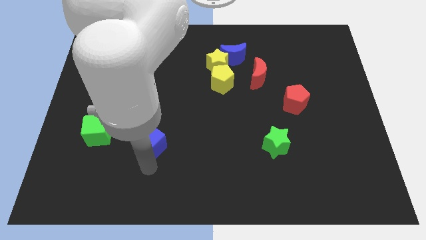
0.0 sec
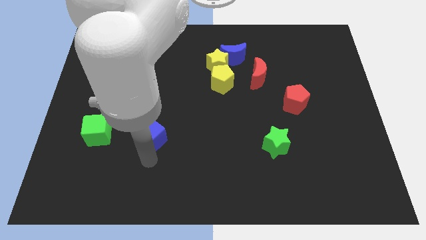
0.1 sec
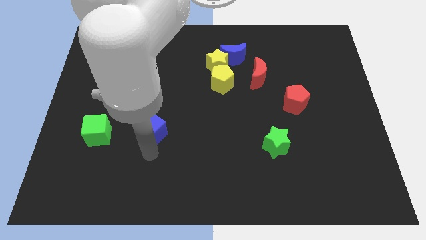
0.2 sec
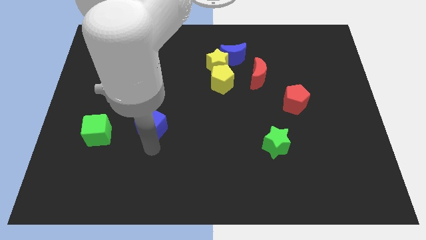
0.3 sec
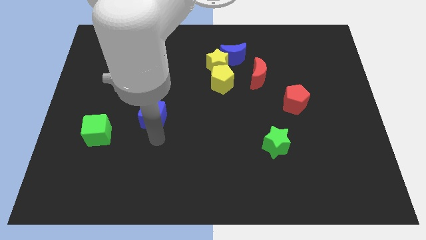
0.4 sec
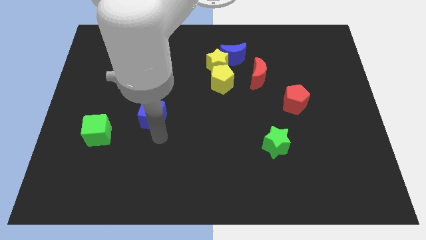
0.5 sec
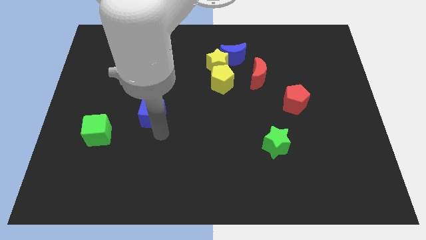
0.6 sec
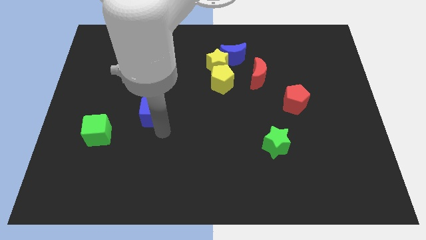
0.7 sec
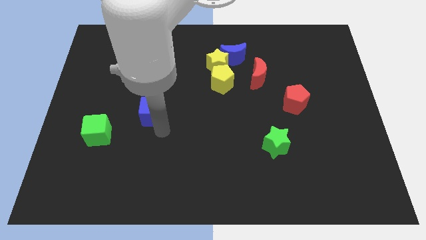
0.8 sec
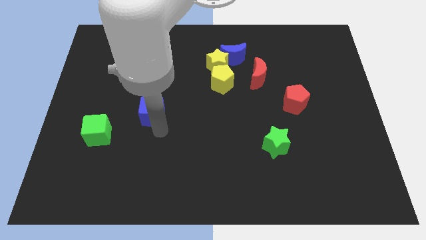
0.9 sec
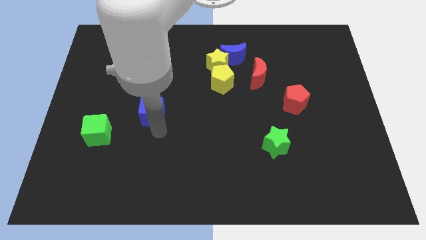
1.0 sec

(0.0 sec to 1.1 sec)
place the blue cube between the green cube and yellow pentagon

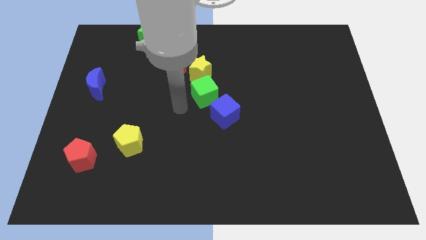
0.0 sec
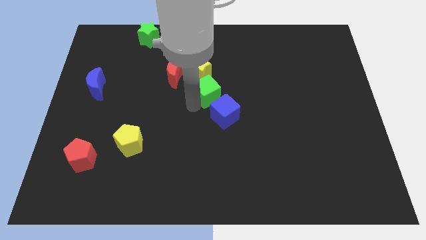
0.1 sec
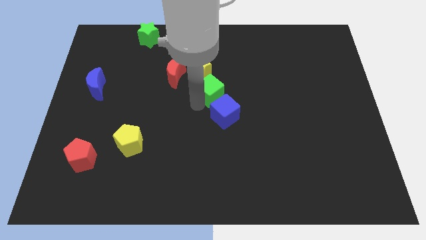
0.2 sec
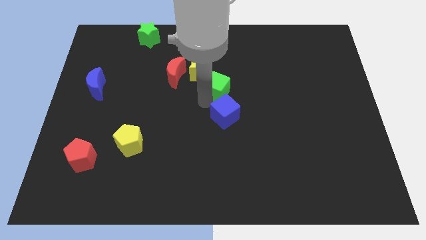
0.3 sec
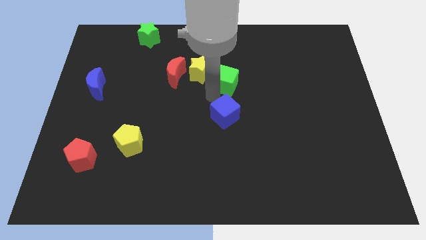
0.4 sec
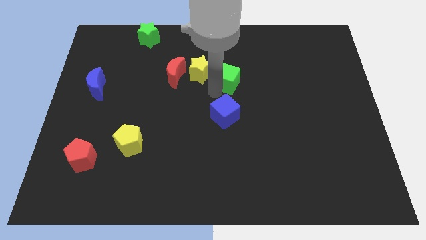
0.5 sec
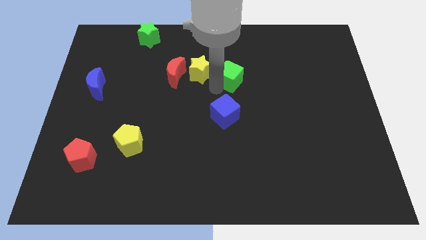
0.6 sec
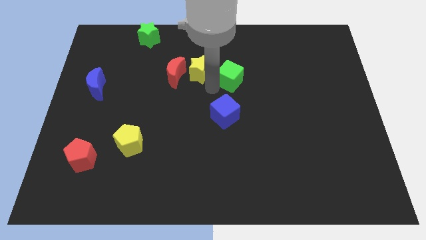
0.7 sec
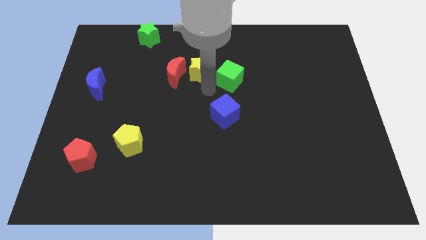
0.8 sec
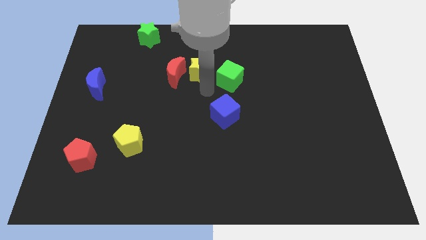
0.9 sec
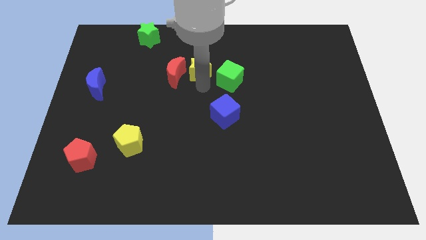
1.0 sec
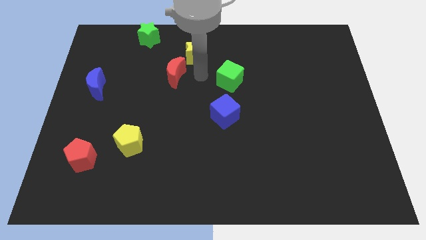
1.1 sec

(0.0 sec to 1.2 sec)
separate green cube and the yellow star

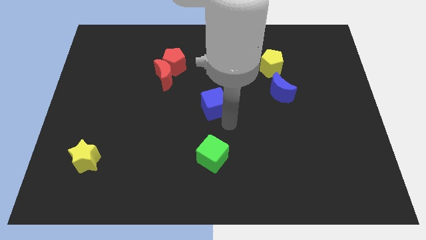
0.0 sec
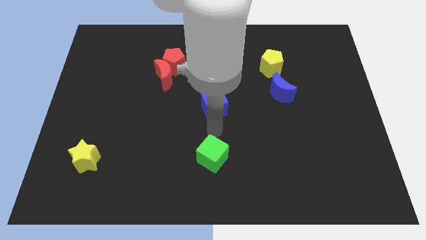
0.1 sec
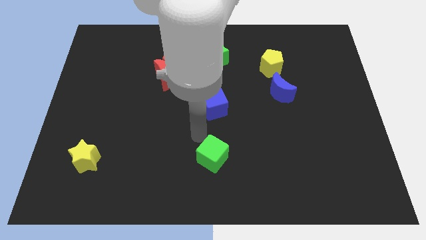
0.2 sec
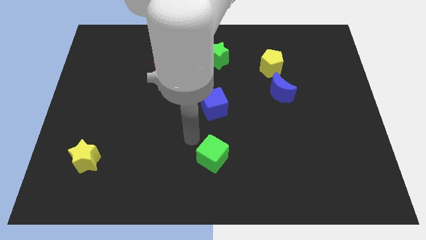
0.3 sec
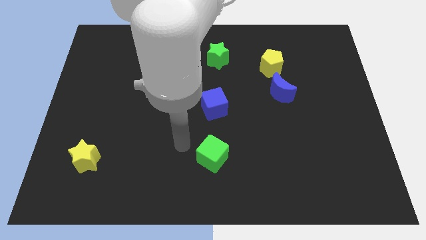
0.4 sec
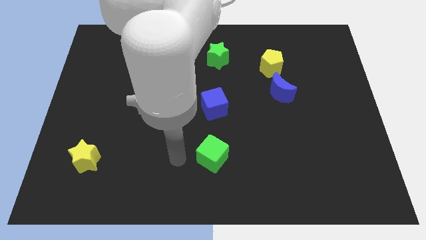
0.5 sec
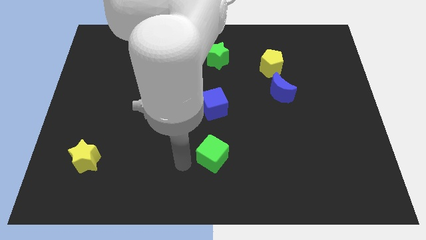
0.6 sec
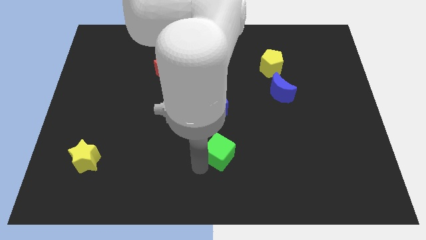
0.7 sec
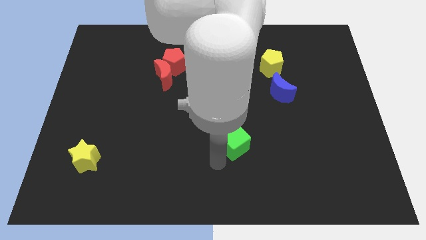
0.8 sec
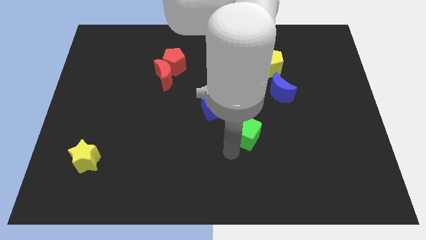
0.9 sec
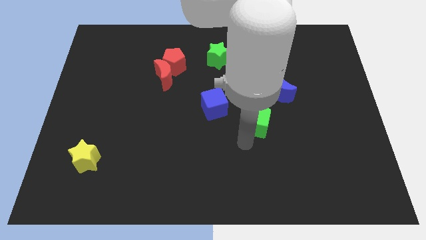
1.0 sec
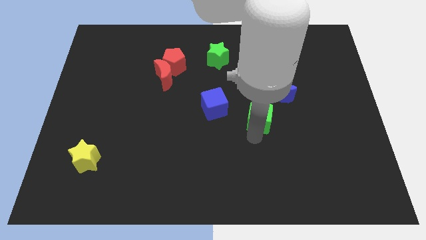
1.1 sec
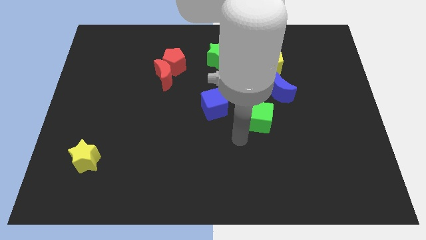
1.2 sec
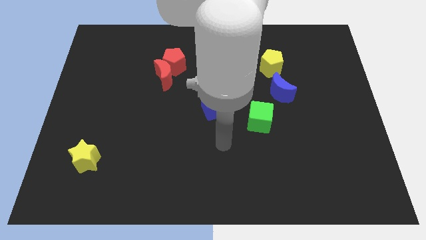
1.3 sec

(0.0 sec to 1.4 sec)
push the green cube towards the blue moon

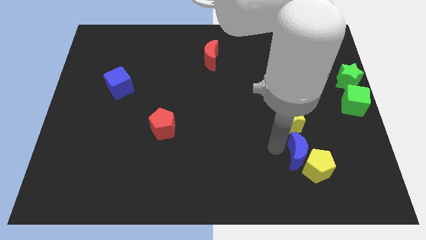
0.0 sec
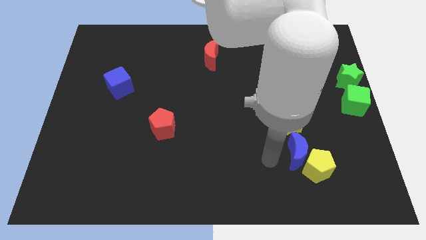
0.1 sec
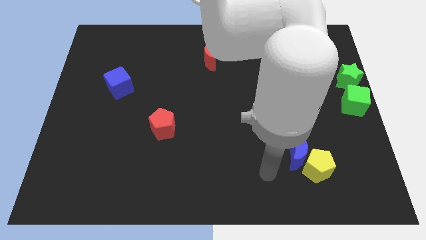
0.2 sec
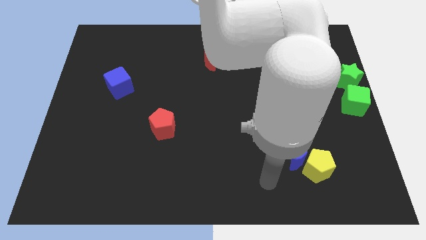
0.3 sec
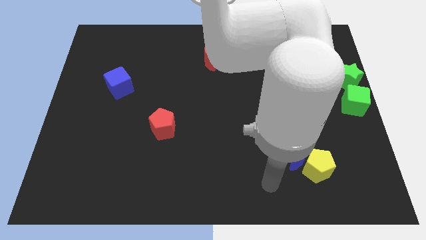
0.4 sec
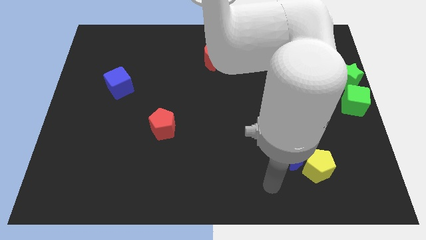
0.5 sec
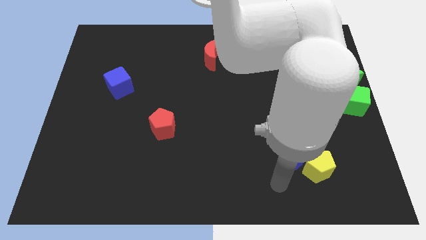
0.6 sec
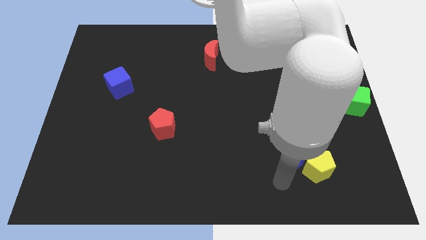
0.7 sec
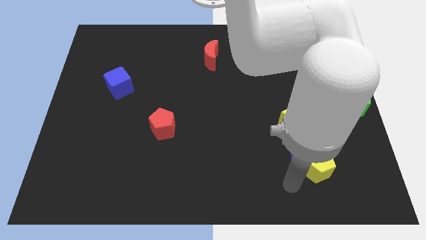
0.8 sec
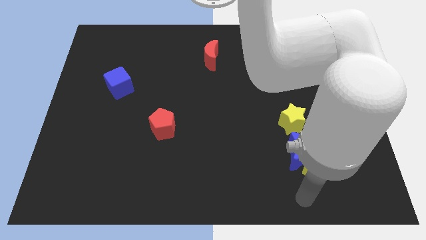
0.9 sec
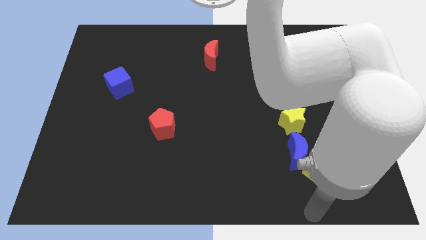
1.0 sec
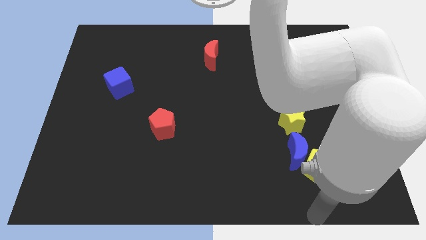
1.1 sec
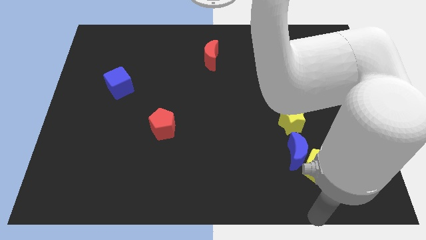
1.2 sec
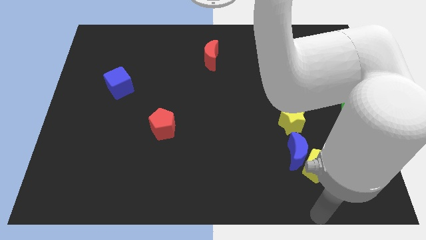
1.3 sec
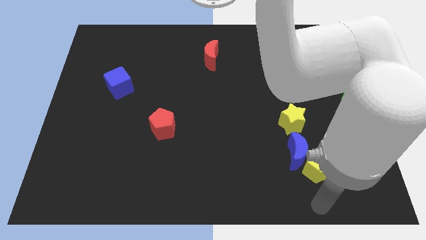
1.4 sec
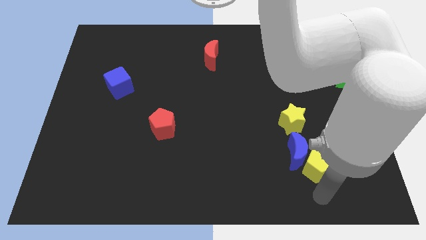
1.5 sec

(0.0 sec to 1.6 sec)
tap on the bottom side of the yellow pentagon

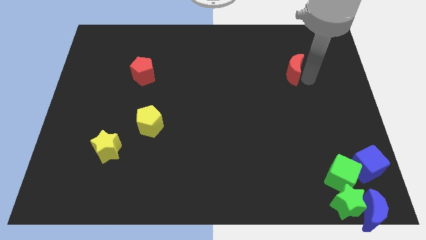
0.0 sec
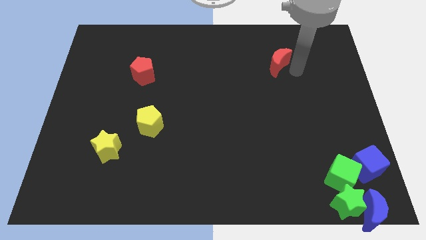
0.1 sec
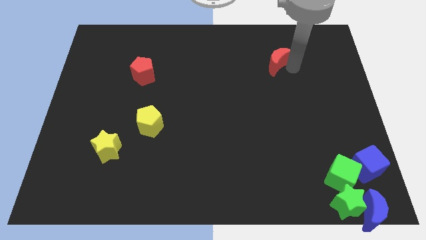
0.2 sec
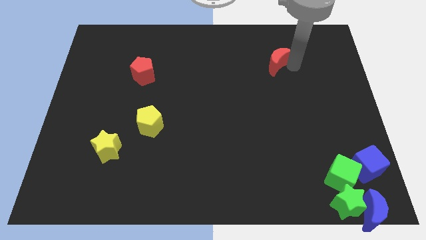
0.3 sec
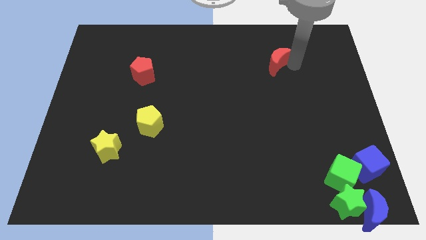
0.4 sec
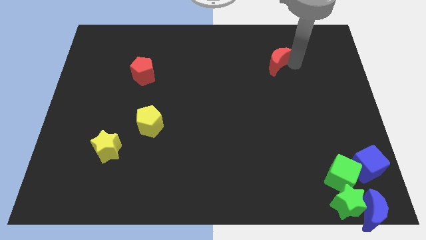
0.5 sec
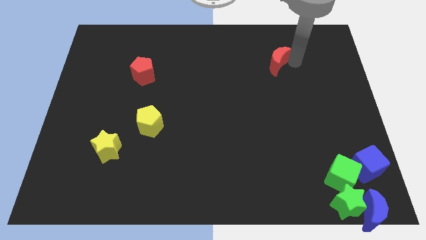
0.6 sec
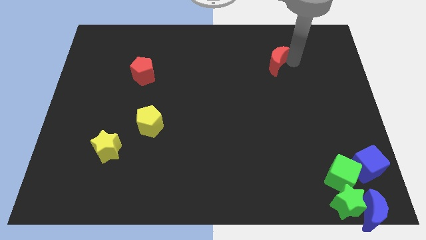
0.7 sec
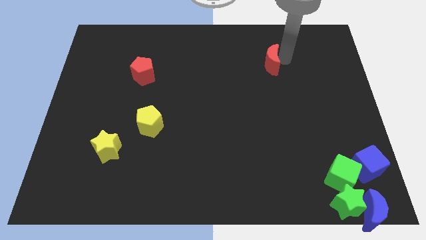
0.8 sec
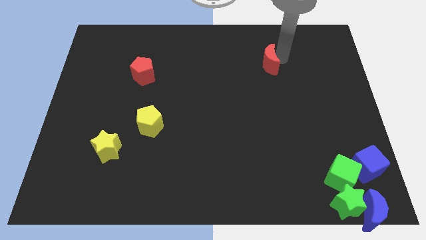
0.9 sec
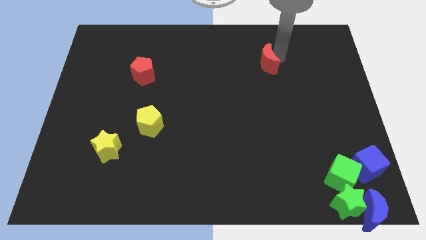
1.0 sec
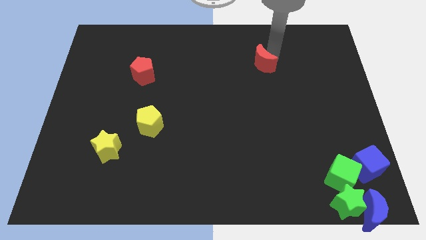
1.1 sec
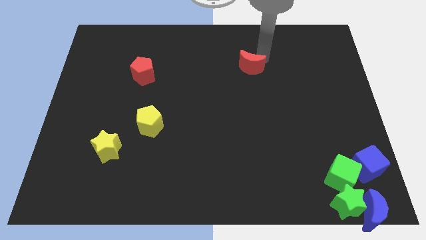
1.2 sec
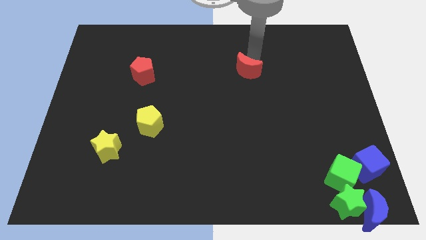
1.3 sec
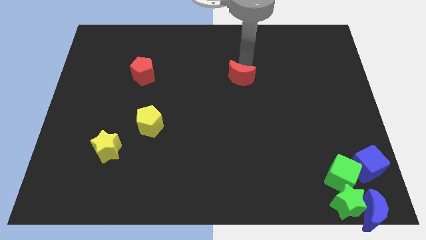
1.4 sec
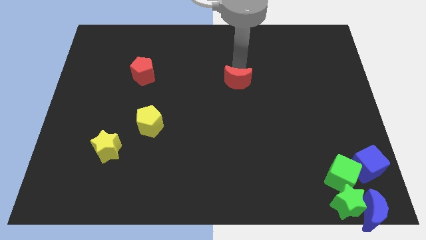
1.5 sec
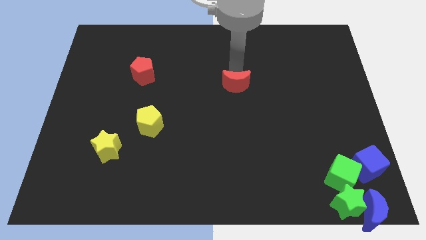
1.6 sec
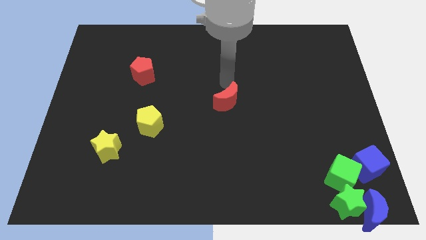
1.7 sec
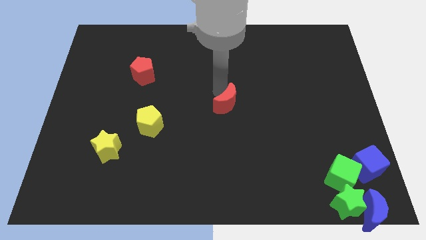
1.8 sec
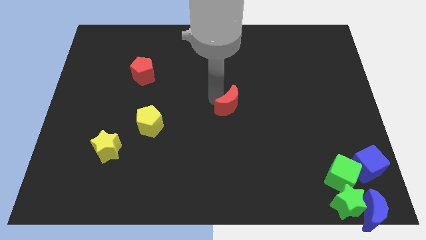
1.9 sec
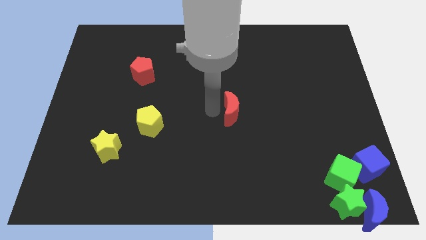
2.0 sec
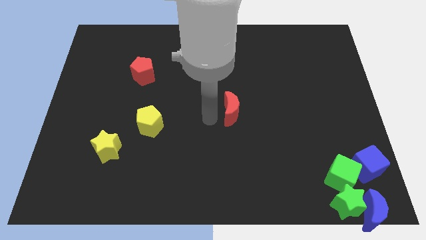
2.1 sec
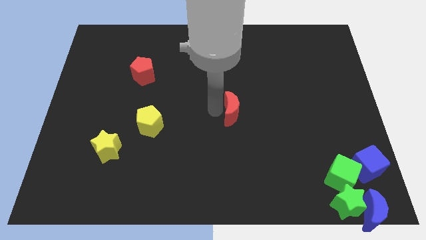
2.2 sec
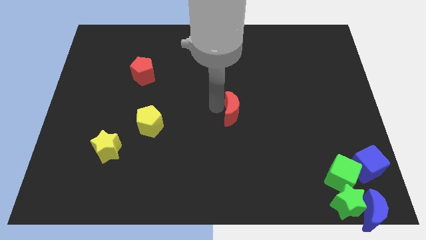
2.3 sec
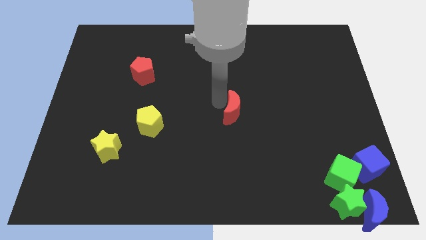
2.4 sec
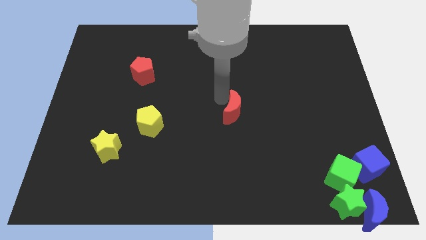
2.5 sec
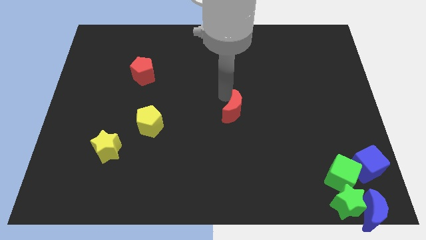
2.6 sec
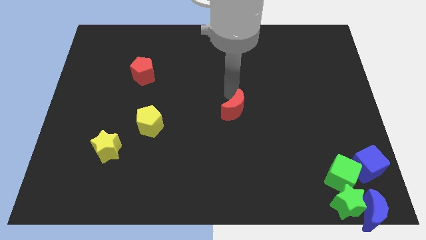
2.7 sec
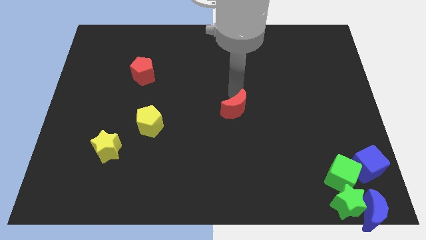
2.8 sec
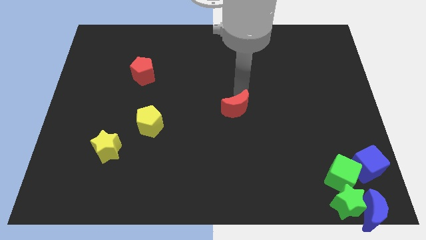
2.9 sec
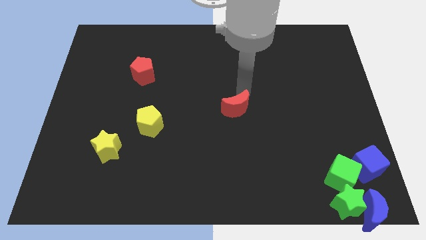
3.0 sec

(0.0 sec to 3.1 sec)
move the red moon towards the bottom side of the board

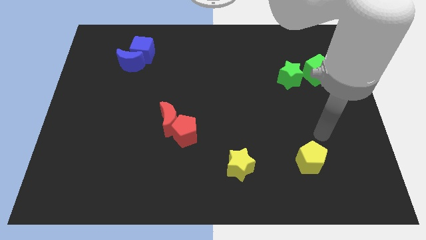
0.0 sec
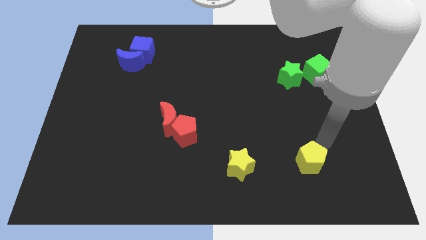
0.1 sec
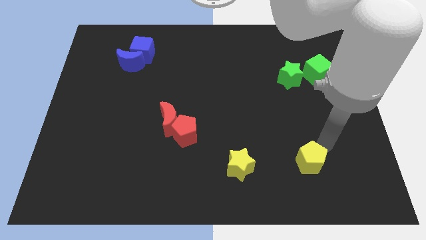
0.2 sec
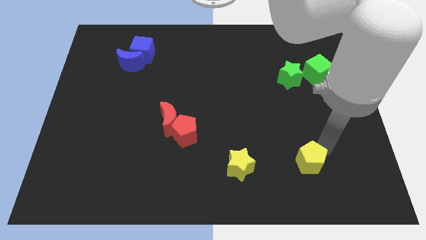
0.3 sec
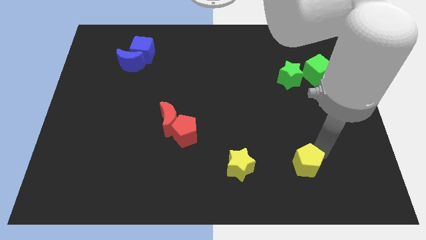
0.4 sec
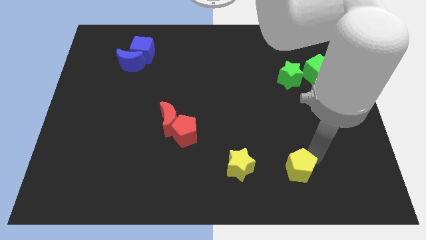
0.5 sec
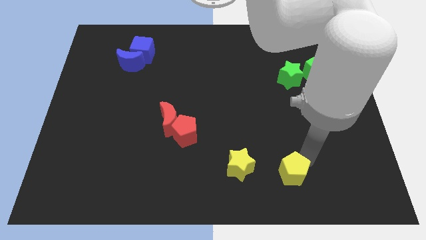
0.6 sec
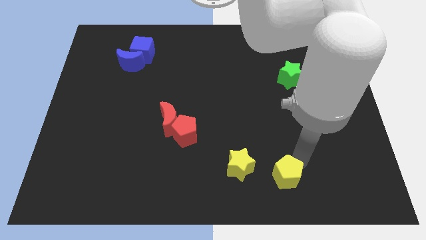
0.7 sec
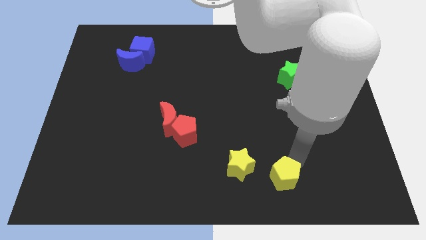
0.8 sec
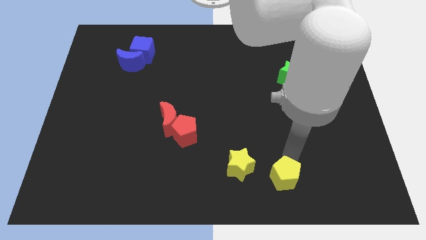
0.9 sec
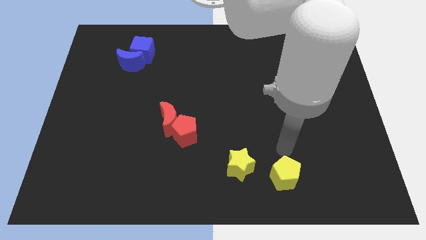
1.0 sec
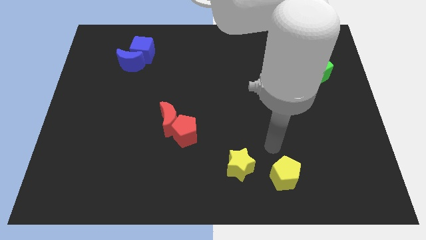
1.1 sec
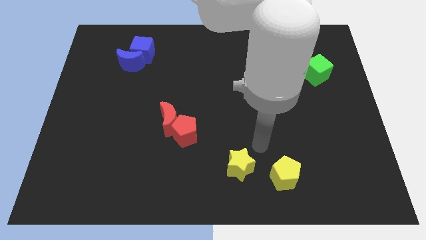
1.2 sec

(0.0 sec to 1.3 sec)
push the yellow pentagon to the bottom right of the yellow star
